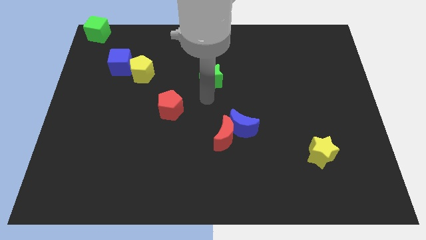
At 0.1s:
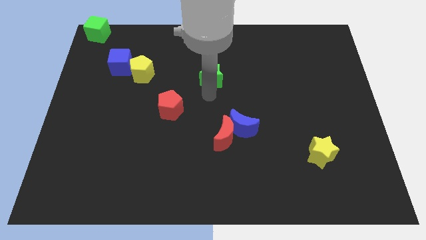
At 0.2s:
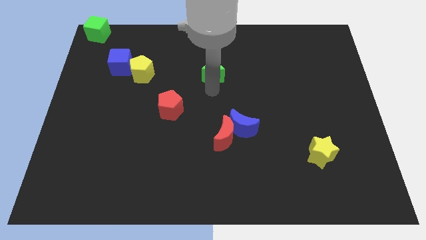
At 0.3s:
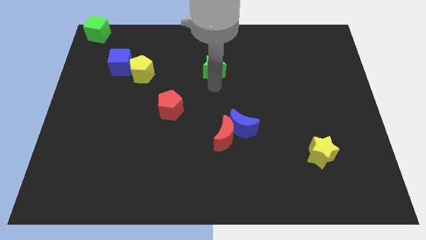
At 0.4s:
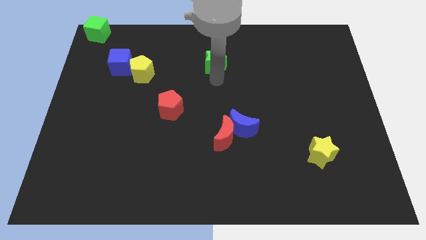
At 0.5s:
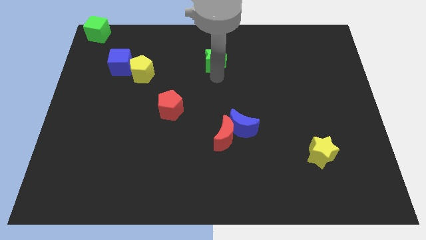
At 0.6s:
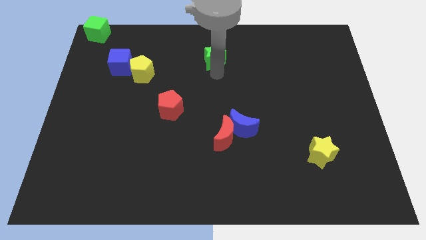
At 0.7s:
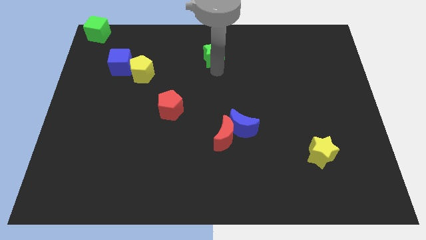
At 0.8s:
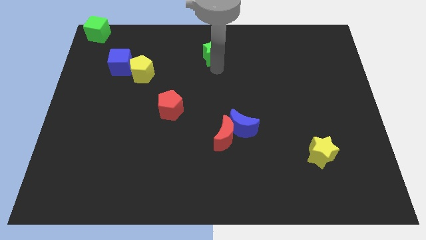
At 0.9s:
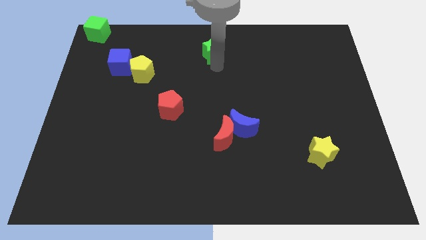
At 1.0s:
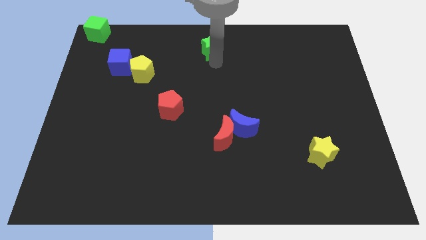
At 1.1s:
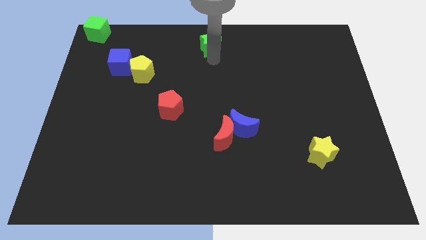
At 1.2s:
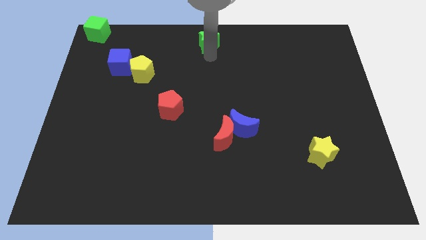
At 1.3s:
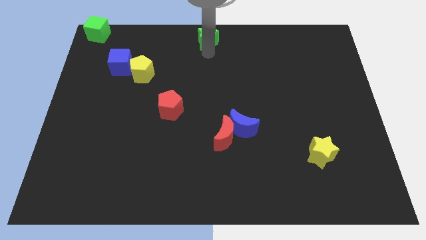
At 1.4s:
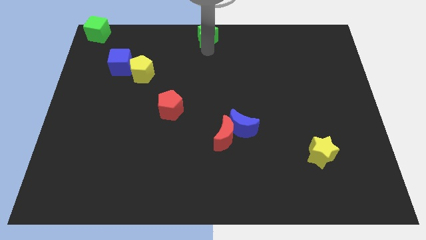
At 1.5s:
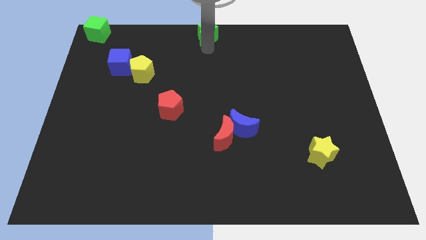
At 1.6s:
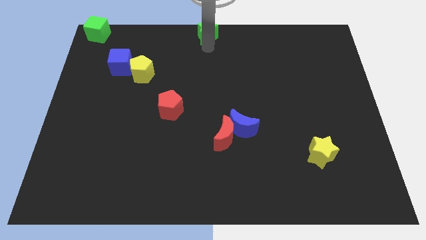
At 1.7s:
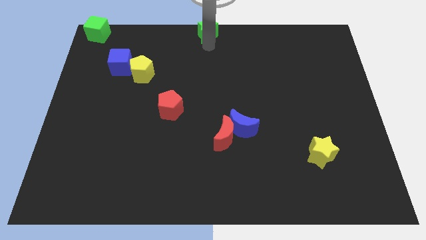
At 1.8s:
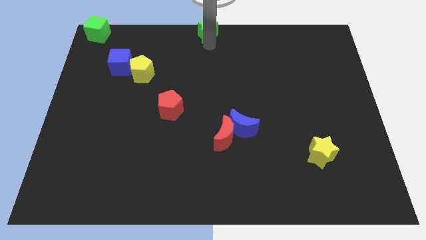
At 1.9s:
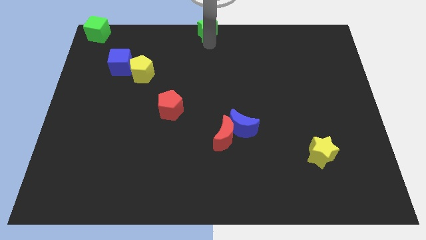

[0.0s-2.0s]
move the green star to the top center

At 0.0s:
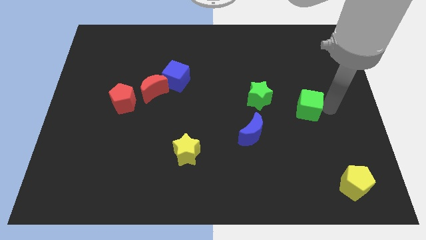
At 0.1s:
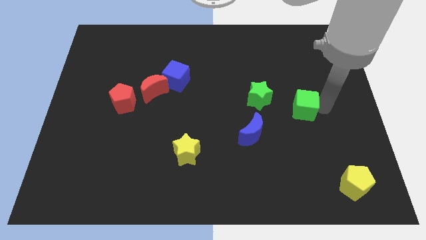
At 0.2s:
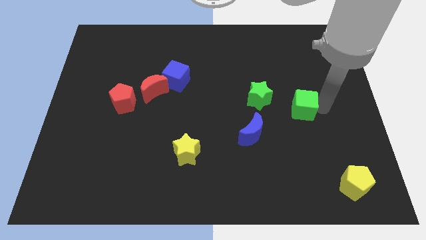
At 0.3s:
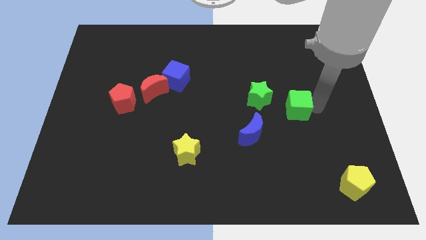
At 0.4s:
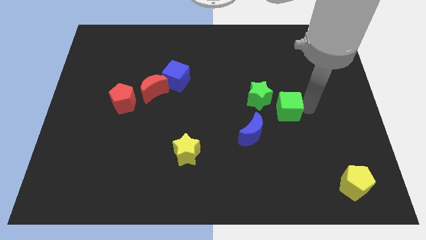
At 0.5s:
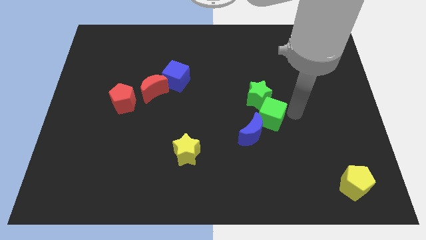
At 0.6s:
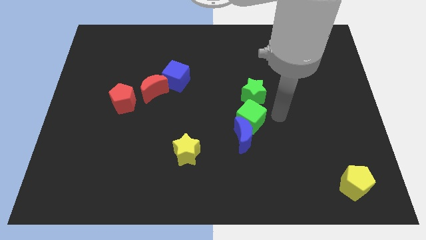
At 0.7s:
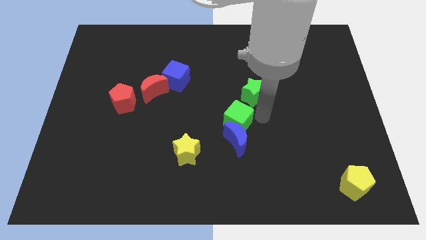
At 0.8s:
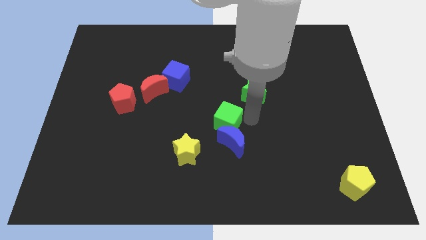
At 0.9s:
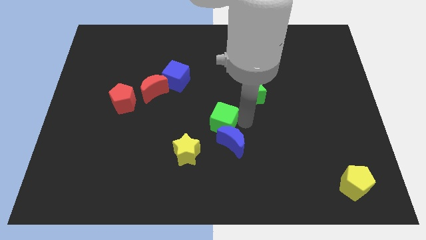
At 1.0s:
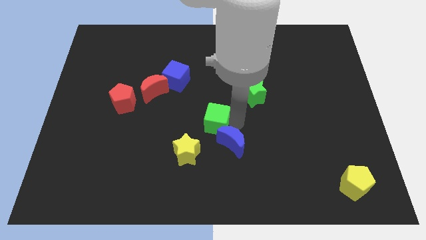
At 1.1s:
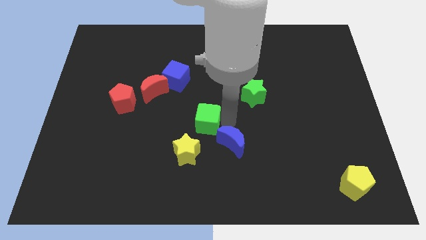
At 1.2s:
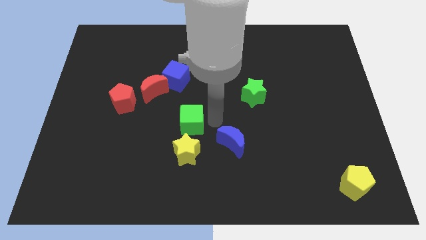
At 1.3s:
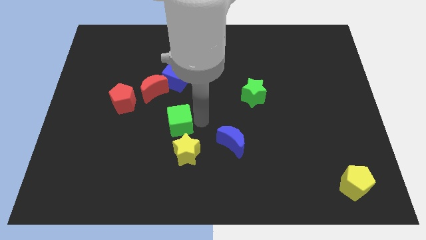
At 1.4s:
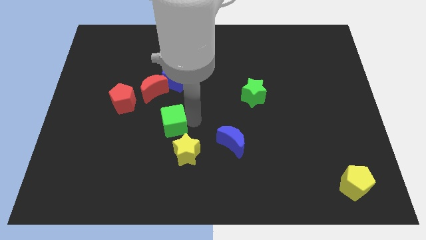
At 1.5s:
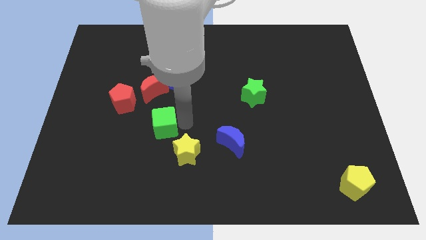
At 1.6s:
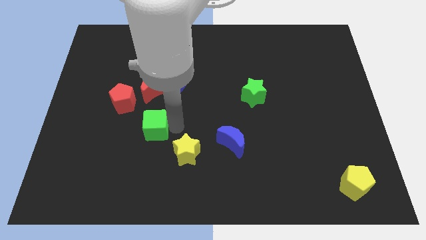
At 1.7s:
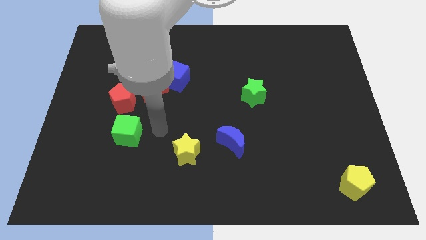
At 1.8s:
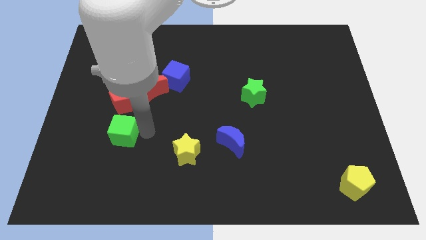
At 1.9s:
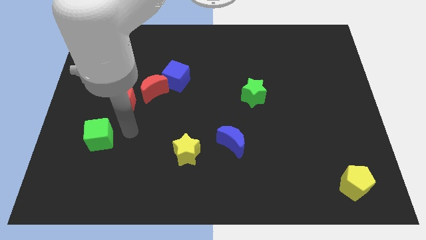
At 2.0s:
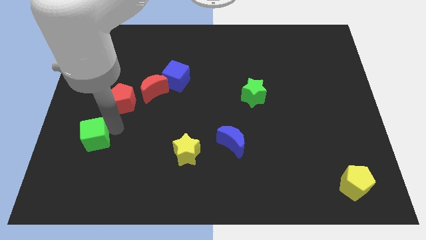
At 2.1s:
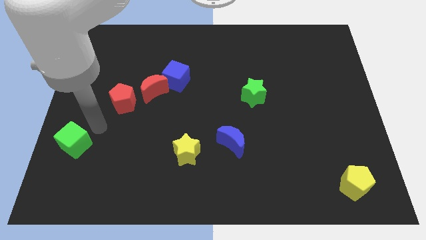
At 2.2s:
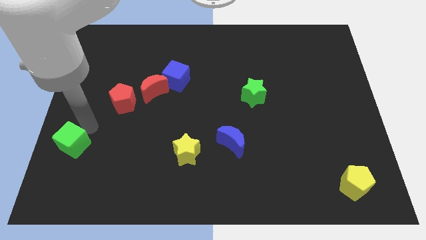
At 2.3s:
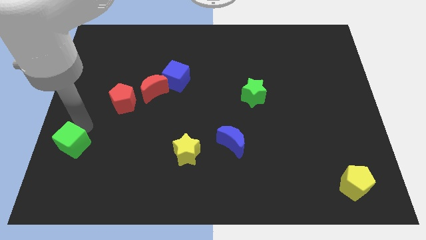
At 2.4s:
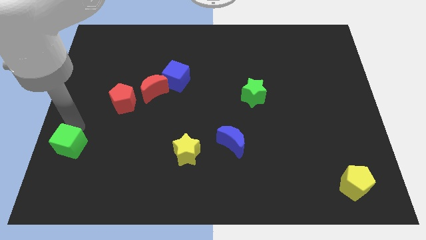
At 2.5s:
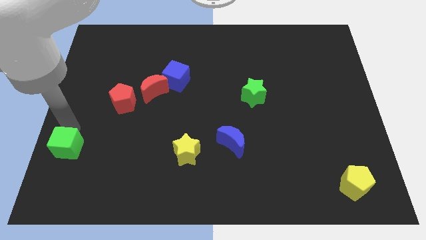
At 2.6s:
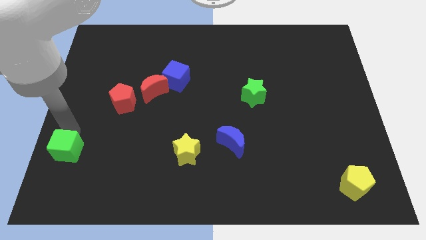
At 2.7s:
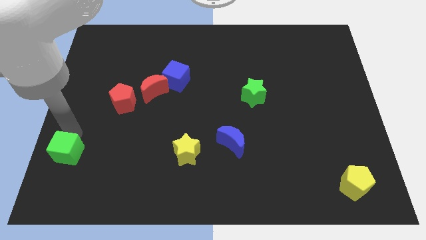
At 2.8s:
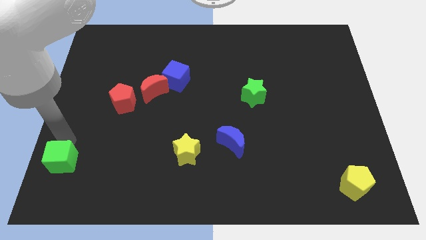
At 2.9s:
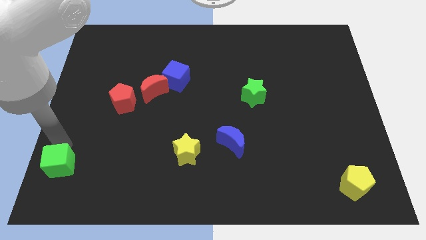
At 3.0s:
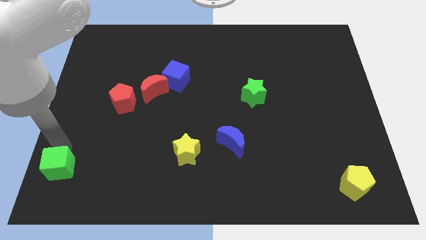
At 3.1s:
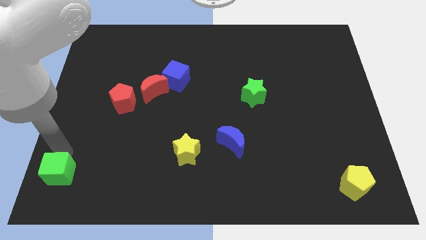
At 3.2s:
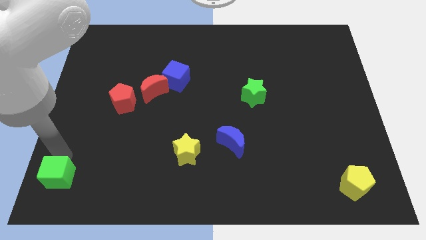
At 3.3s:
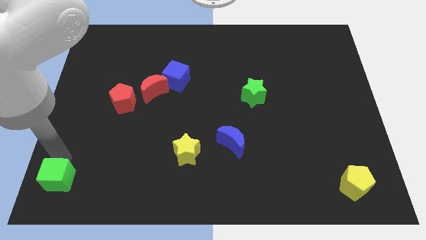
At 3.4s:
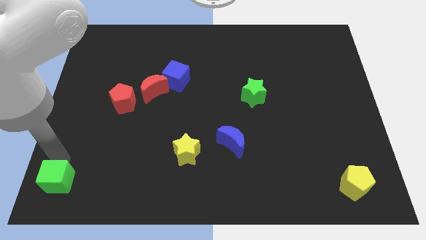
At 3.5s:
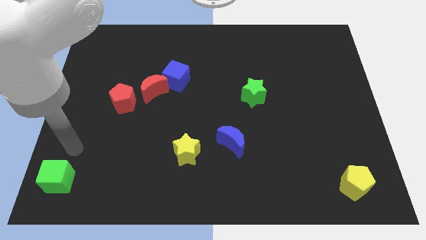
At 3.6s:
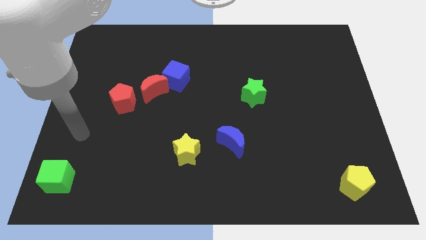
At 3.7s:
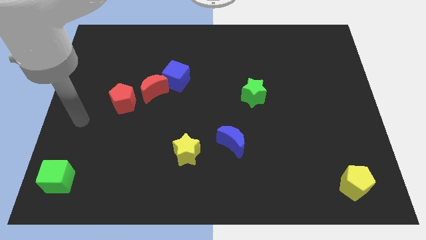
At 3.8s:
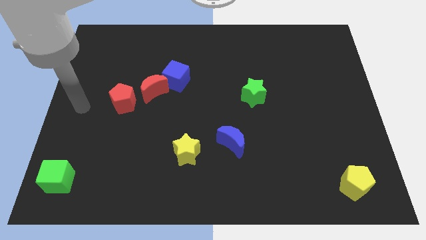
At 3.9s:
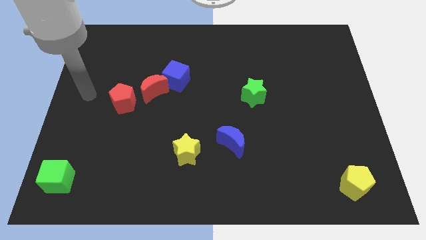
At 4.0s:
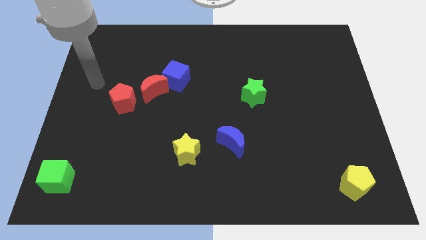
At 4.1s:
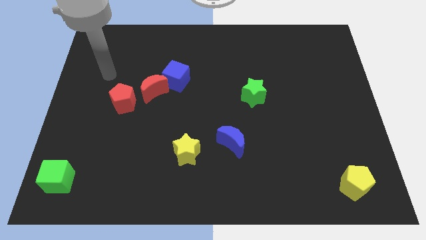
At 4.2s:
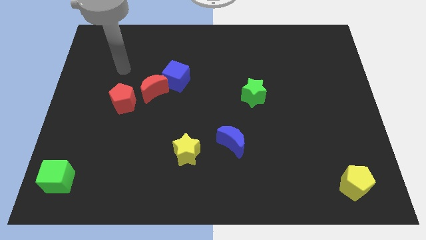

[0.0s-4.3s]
move the green cube towards the bottom left corner of the board

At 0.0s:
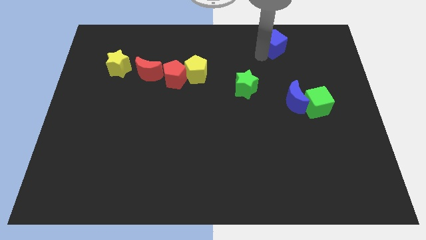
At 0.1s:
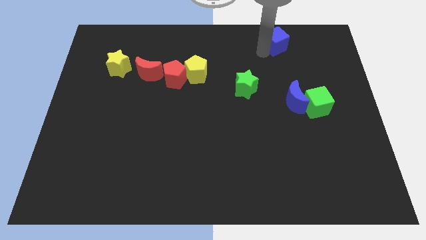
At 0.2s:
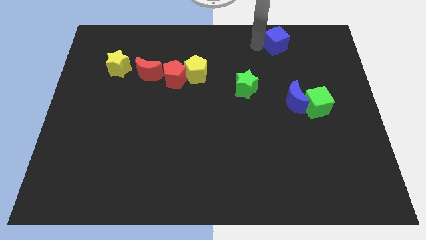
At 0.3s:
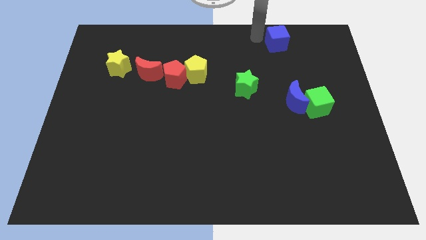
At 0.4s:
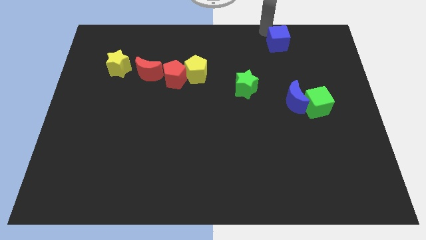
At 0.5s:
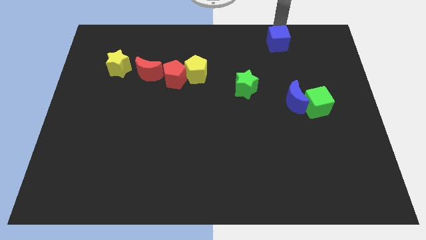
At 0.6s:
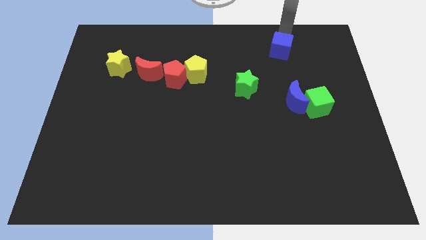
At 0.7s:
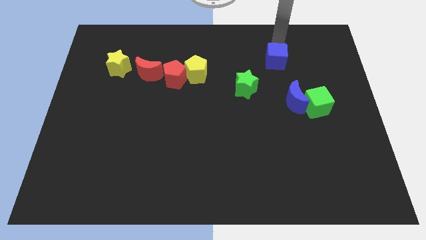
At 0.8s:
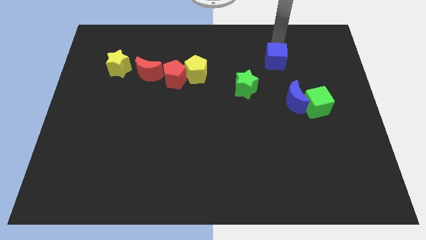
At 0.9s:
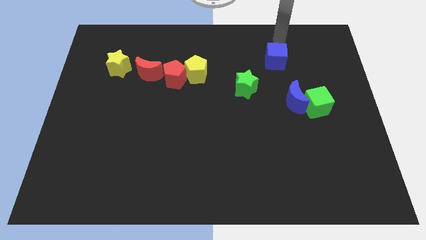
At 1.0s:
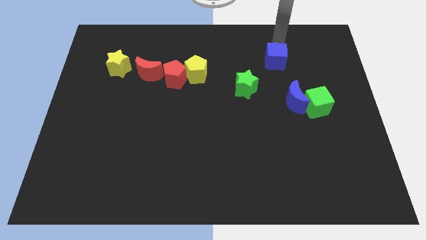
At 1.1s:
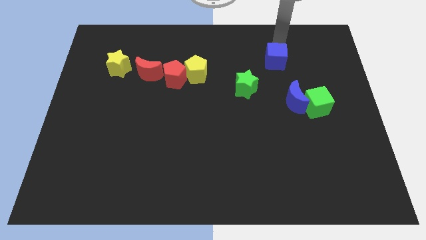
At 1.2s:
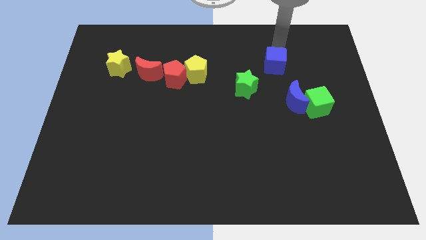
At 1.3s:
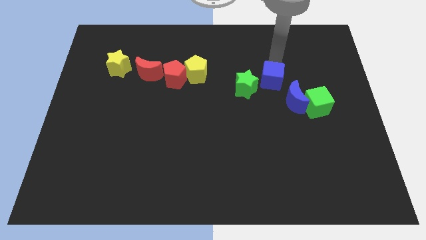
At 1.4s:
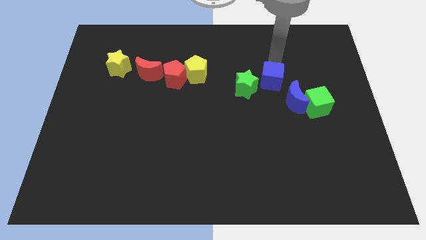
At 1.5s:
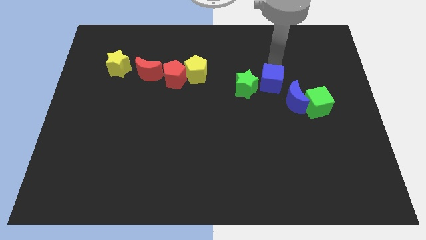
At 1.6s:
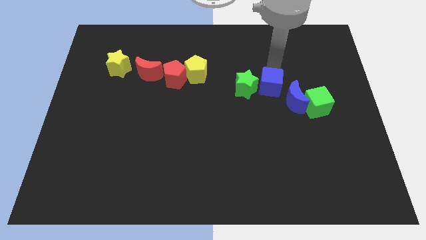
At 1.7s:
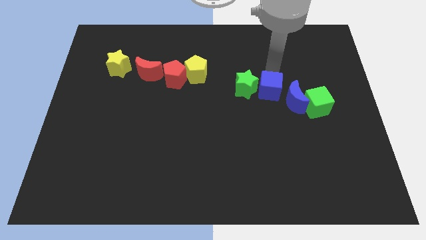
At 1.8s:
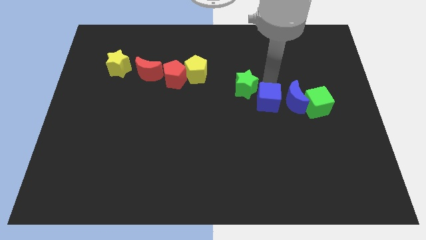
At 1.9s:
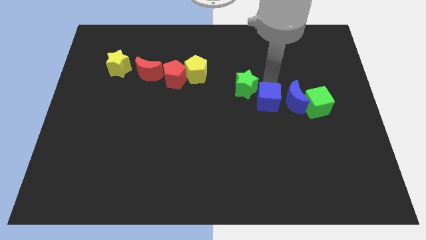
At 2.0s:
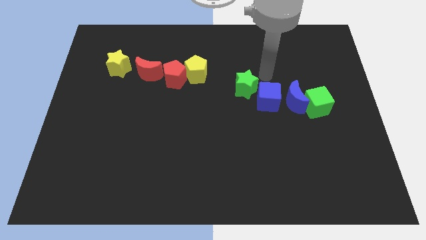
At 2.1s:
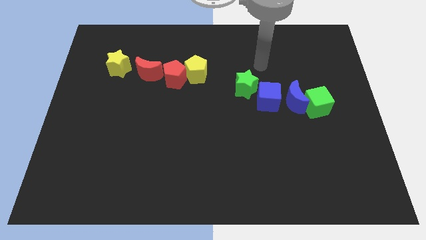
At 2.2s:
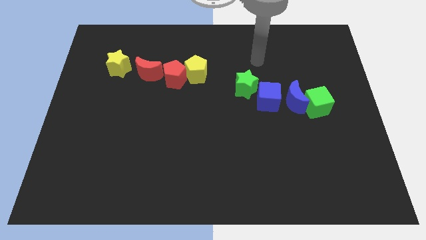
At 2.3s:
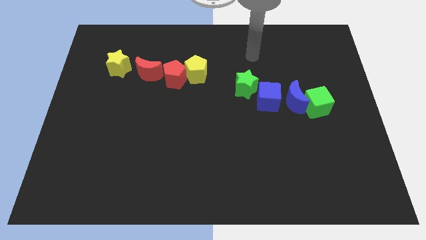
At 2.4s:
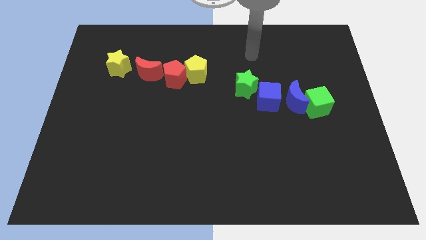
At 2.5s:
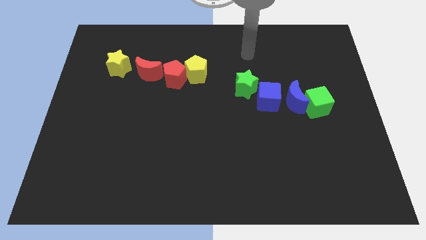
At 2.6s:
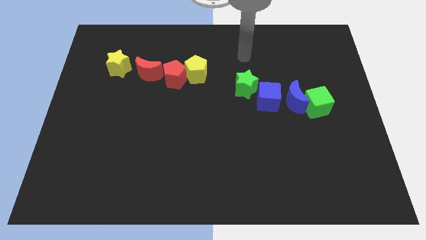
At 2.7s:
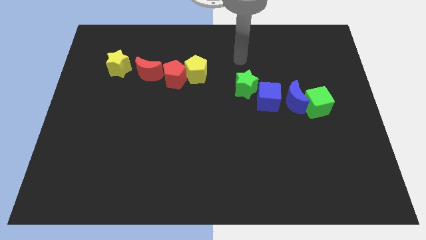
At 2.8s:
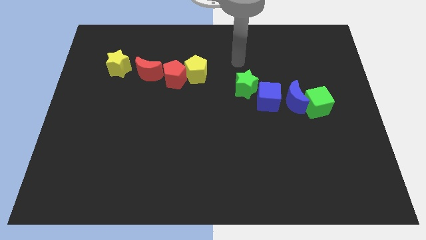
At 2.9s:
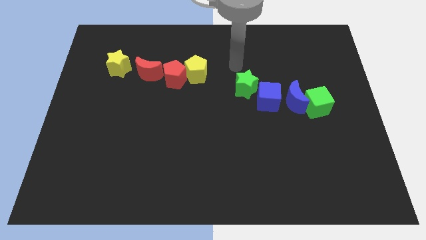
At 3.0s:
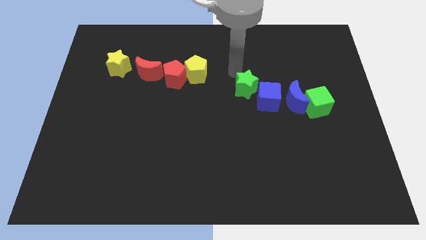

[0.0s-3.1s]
put the blue cube left to the blue moon
